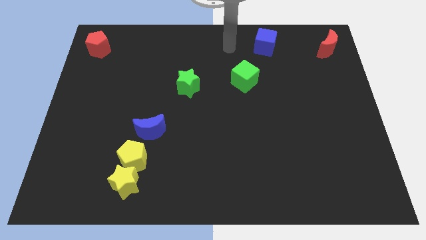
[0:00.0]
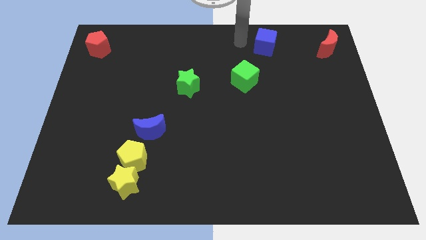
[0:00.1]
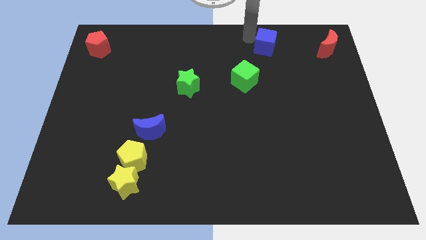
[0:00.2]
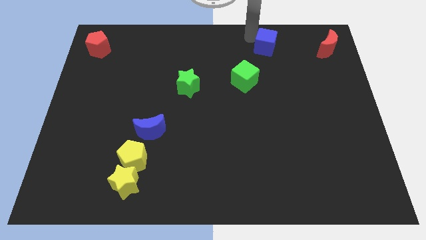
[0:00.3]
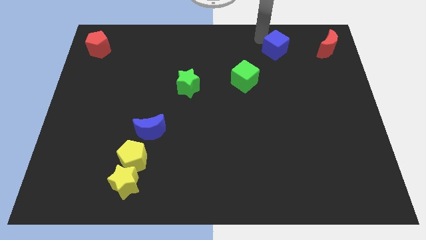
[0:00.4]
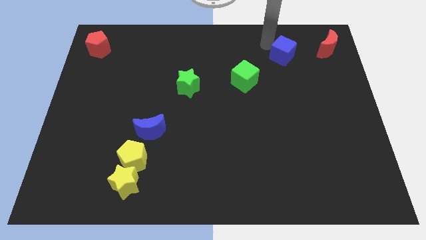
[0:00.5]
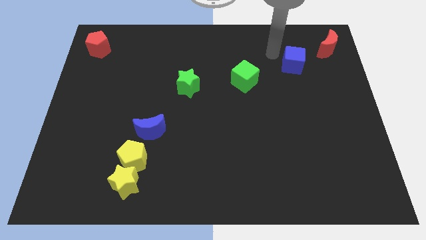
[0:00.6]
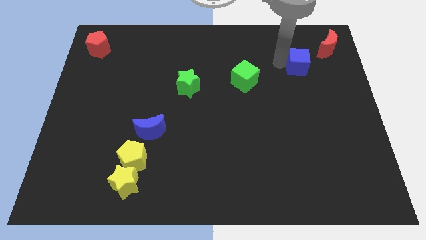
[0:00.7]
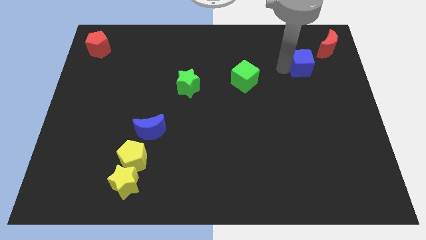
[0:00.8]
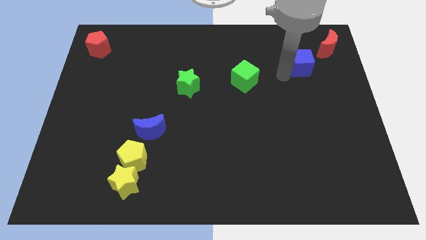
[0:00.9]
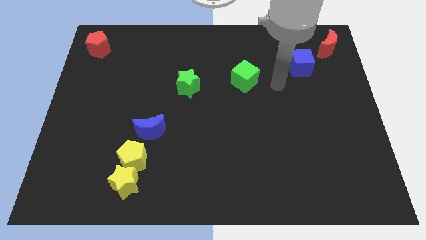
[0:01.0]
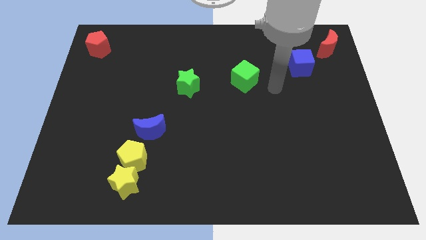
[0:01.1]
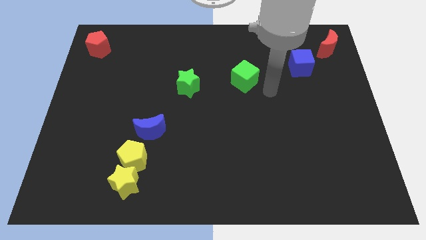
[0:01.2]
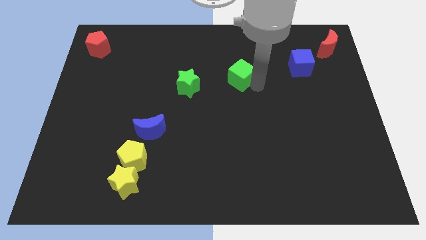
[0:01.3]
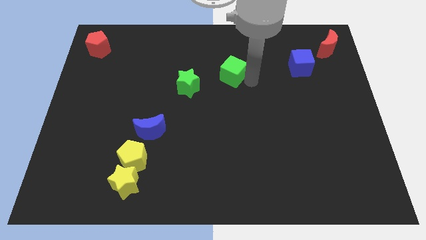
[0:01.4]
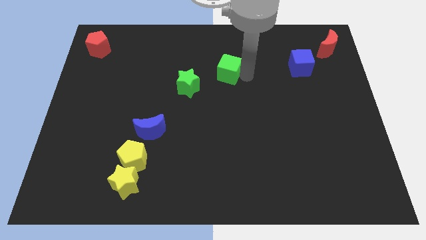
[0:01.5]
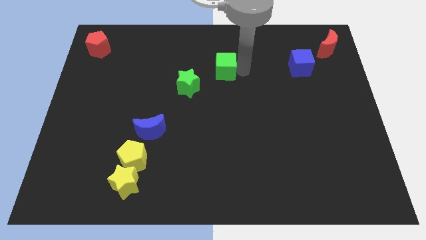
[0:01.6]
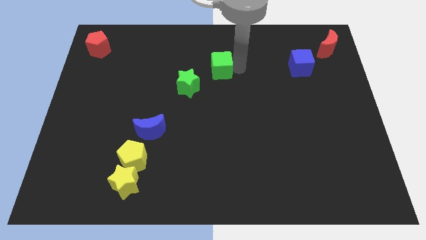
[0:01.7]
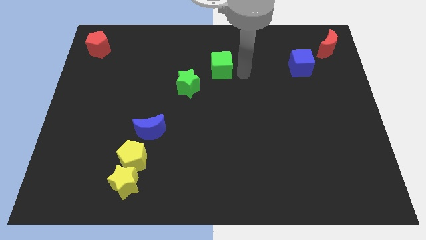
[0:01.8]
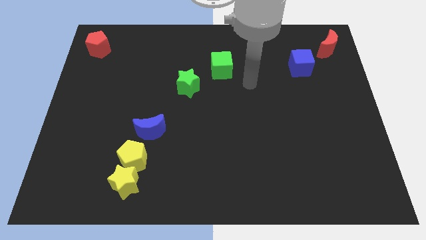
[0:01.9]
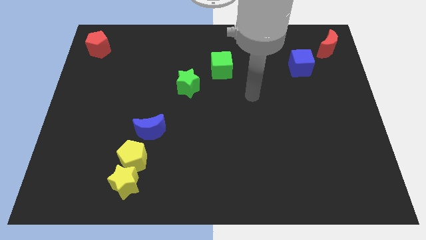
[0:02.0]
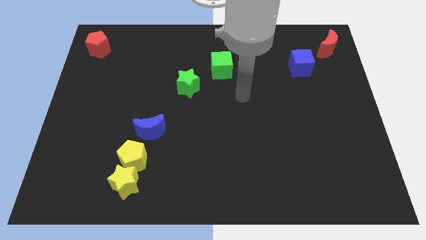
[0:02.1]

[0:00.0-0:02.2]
slide the blue cube diagonally to the red crescent

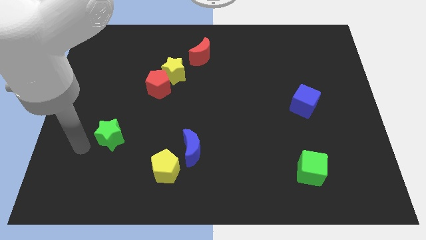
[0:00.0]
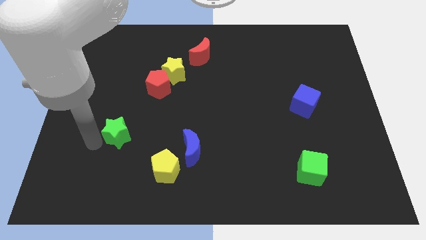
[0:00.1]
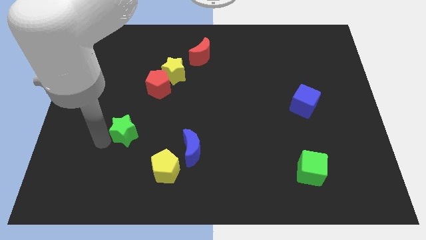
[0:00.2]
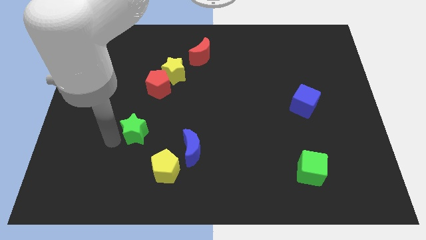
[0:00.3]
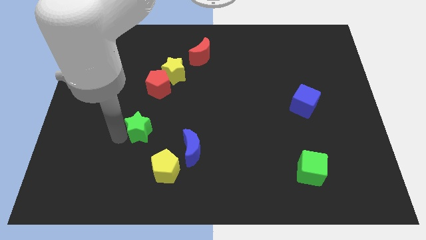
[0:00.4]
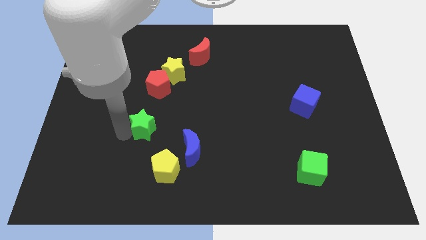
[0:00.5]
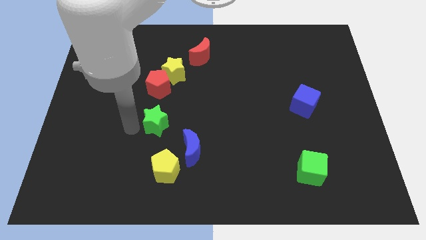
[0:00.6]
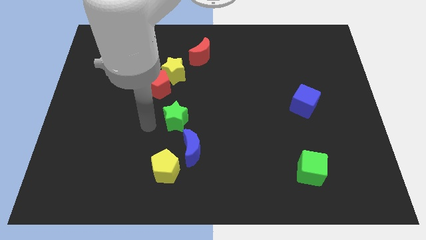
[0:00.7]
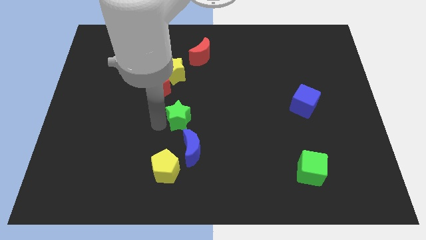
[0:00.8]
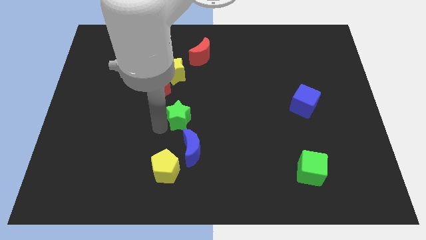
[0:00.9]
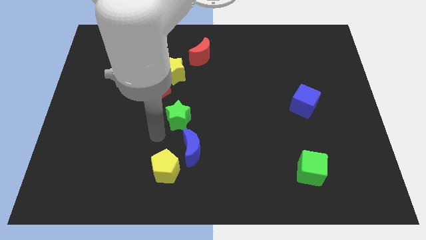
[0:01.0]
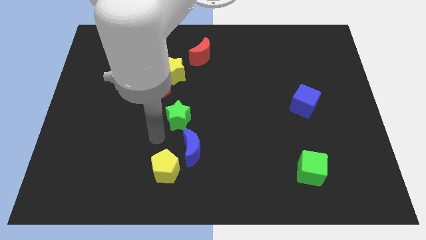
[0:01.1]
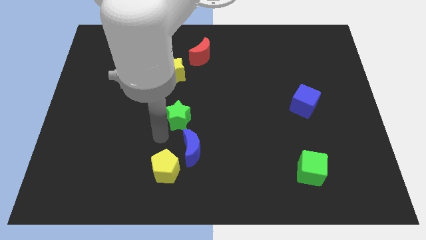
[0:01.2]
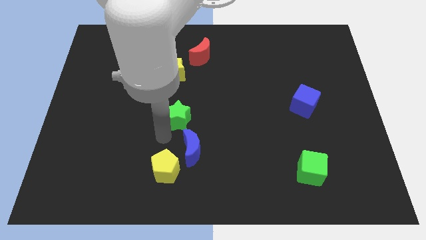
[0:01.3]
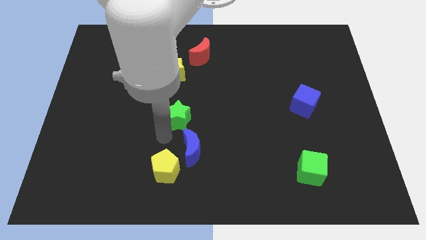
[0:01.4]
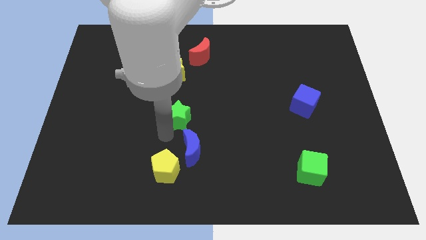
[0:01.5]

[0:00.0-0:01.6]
place the green star towards the top left side of the blue crescent

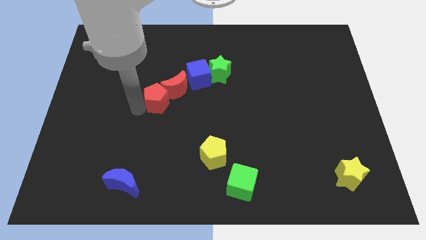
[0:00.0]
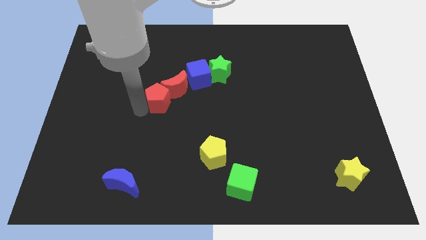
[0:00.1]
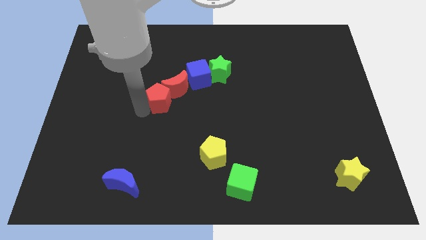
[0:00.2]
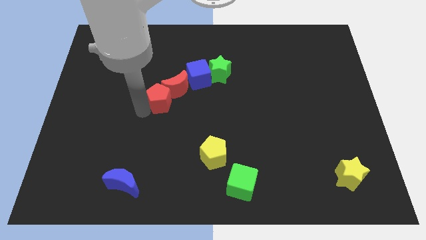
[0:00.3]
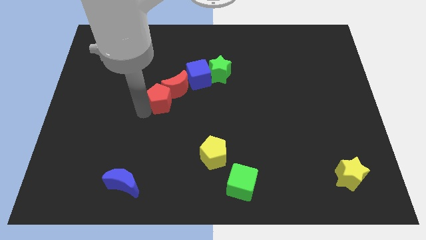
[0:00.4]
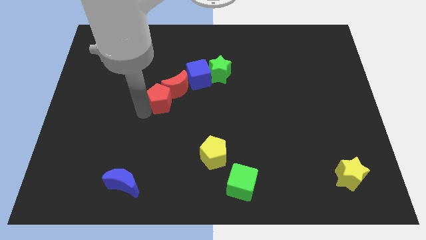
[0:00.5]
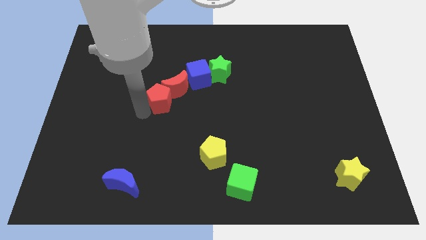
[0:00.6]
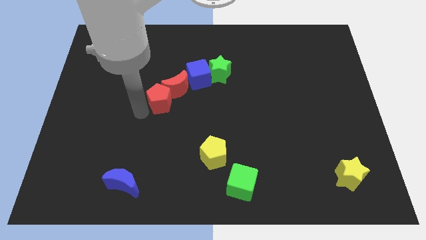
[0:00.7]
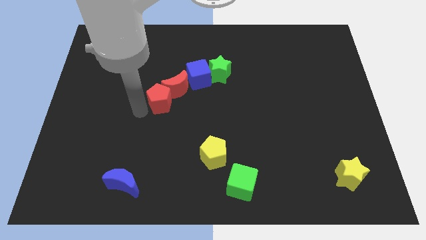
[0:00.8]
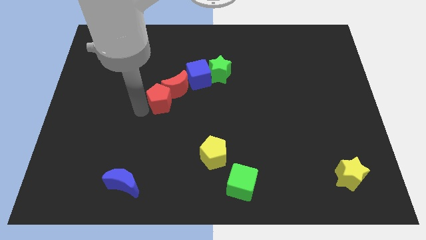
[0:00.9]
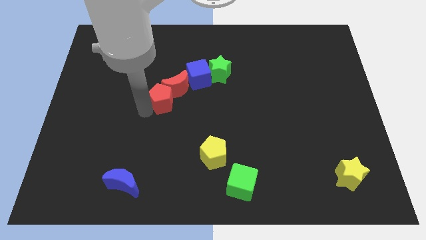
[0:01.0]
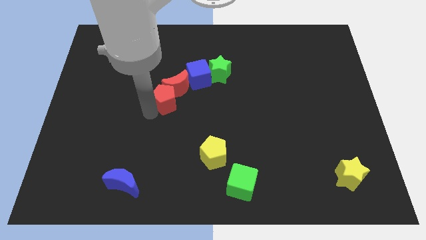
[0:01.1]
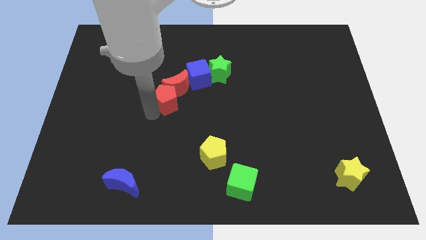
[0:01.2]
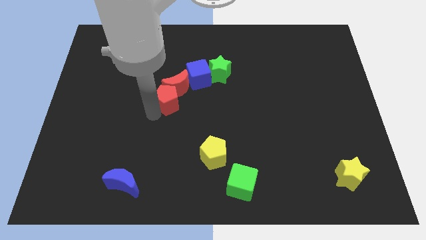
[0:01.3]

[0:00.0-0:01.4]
adjust the red pentagon at the bottom side of the red moon

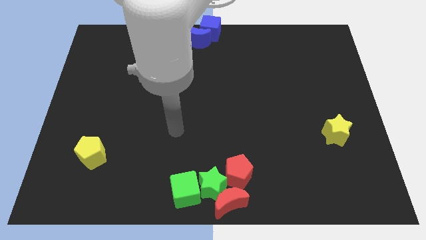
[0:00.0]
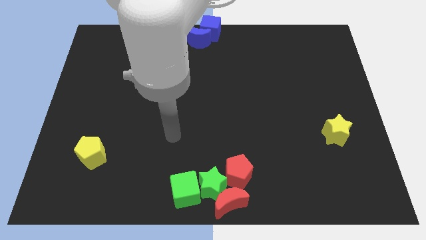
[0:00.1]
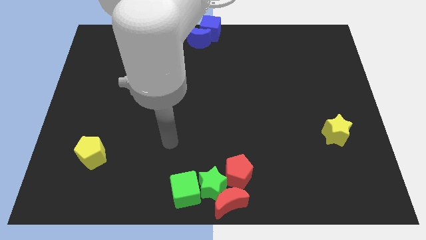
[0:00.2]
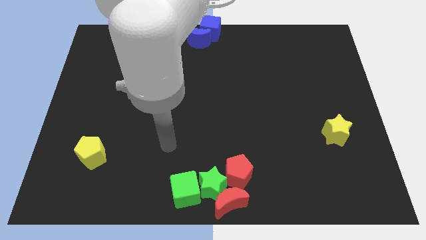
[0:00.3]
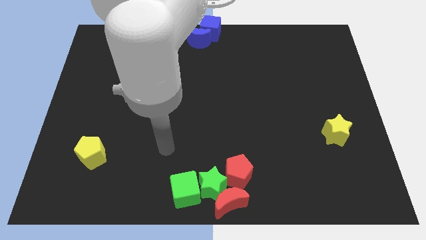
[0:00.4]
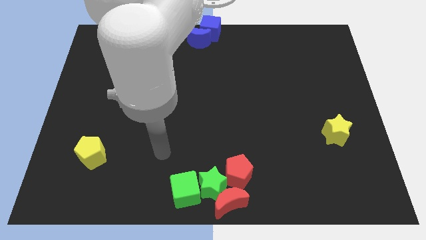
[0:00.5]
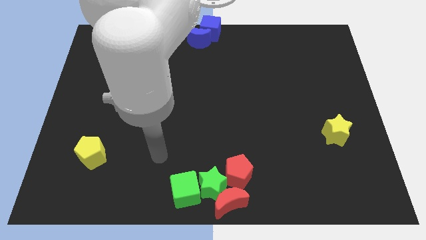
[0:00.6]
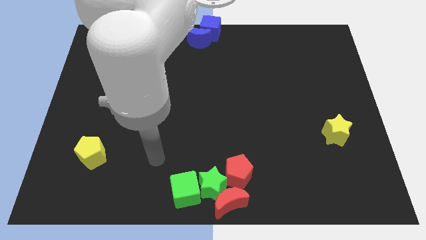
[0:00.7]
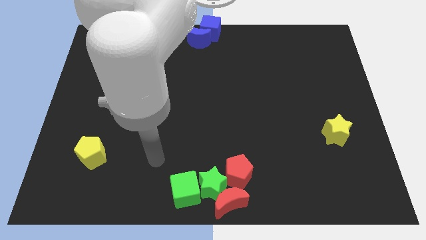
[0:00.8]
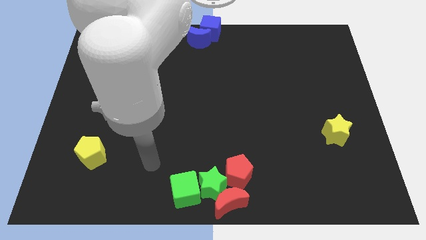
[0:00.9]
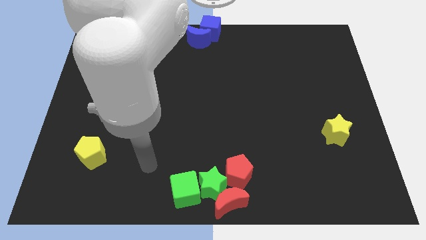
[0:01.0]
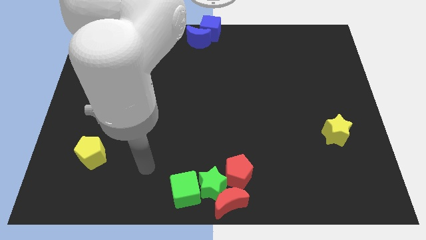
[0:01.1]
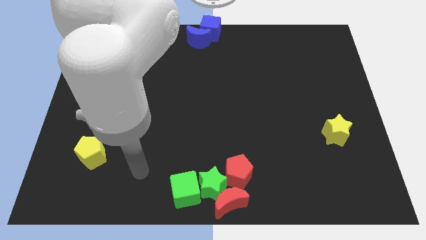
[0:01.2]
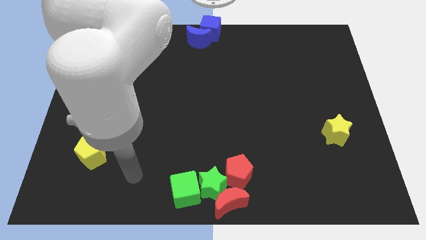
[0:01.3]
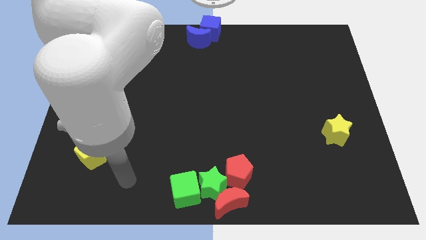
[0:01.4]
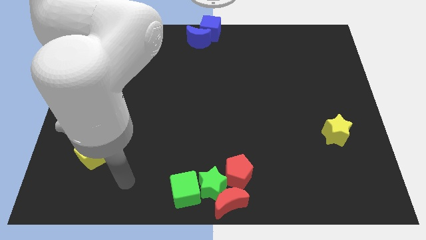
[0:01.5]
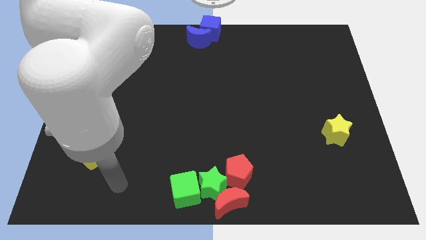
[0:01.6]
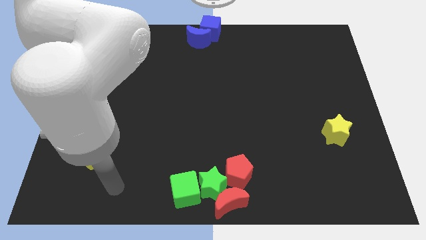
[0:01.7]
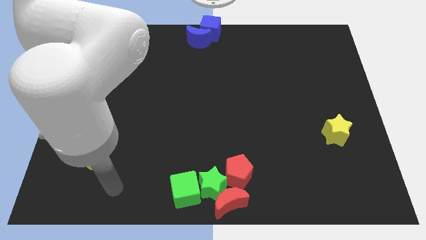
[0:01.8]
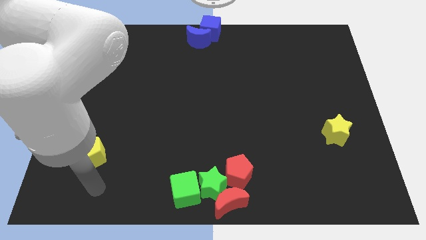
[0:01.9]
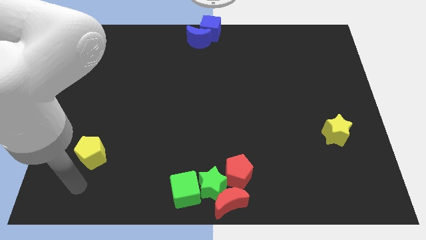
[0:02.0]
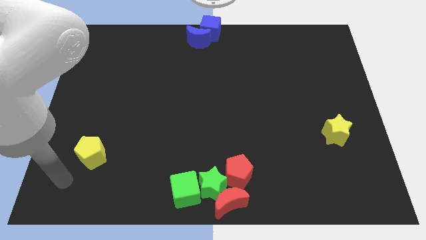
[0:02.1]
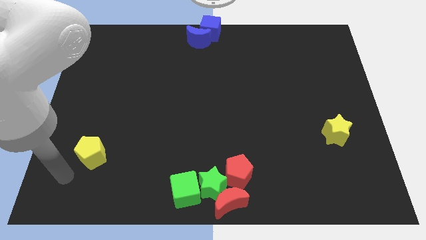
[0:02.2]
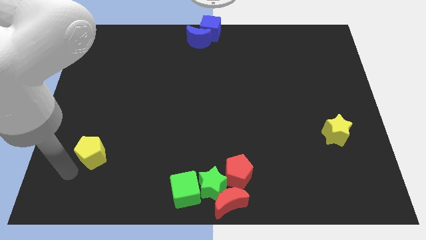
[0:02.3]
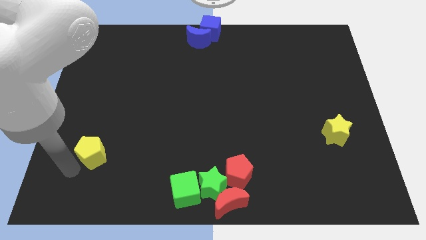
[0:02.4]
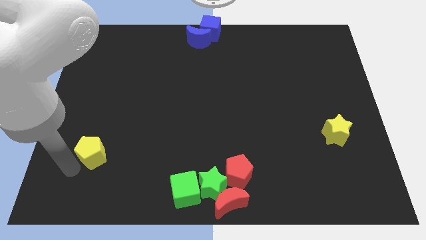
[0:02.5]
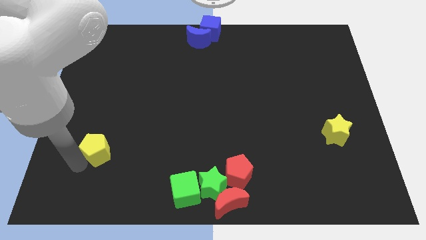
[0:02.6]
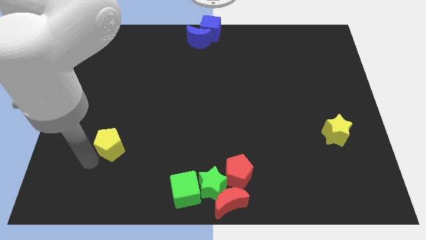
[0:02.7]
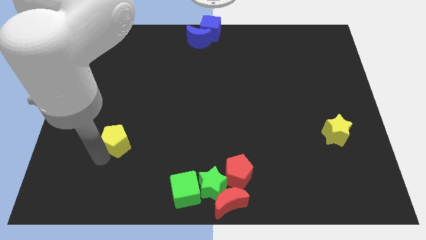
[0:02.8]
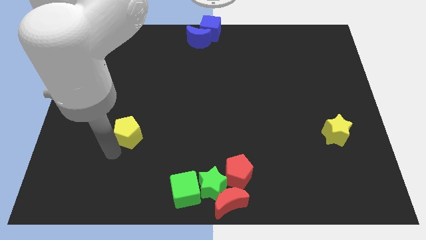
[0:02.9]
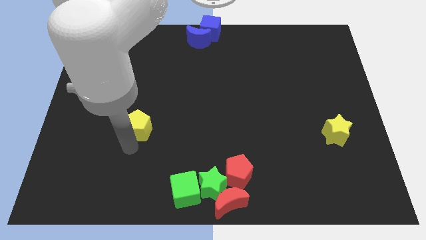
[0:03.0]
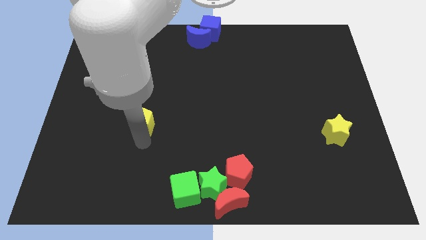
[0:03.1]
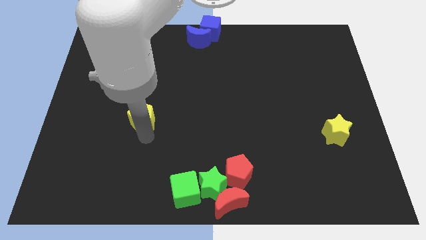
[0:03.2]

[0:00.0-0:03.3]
put the yellow pentagon parallel left to the yellow star

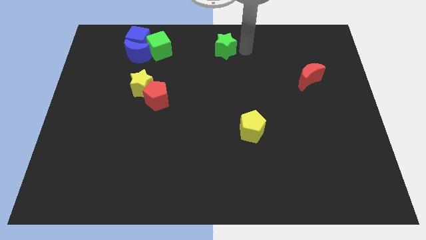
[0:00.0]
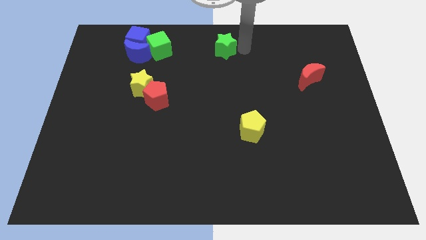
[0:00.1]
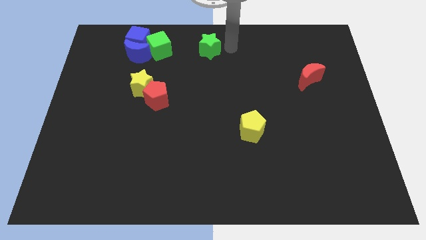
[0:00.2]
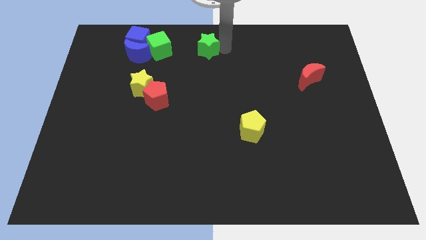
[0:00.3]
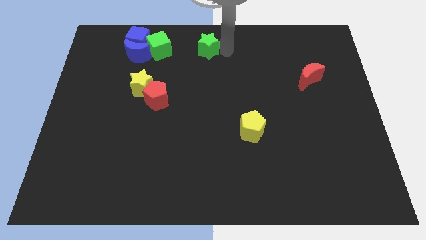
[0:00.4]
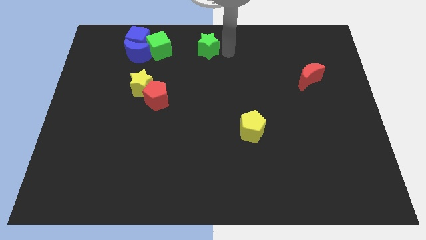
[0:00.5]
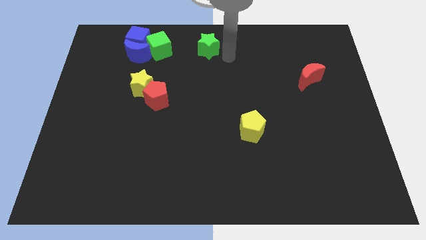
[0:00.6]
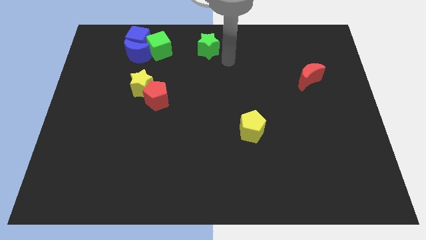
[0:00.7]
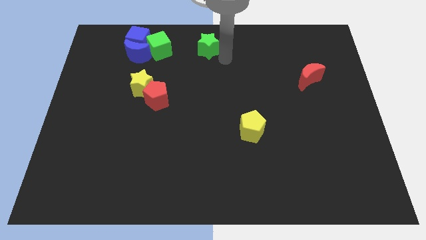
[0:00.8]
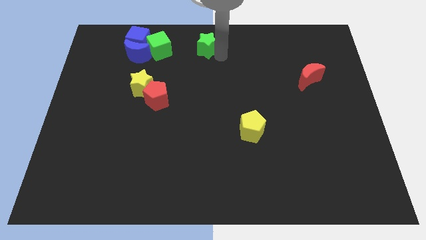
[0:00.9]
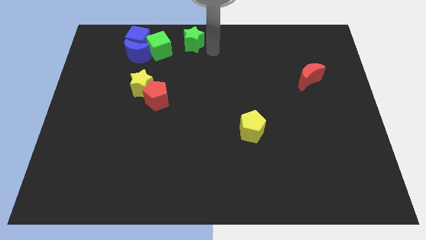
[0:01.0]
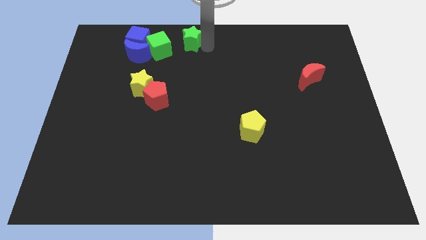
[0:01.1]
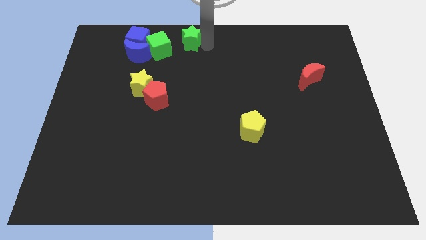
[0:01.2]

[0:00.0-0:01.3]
move the green star to the right of the green cube
